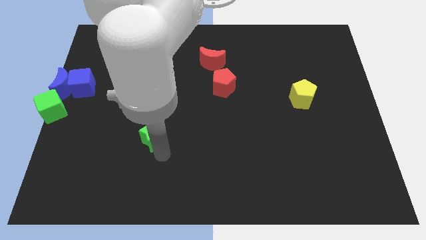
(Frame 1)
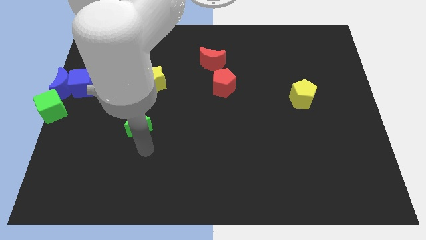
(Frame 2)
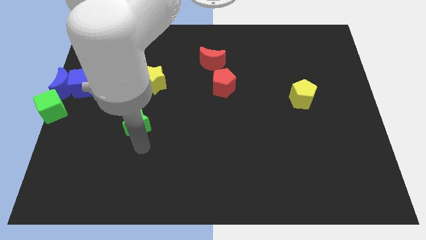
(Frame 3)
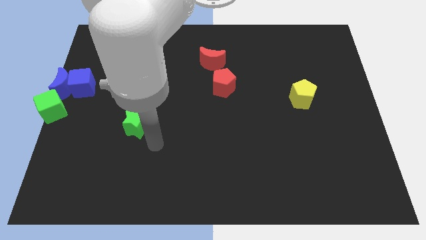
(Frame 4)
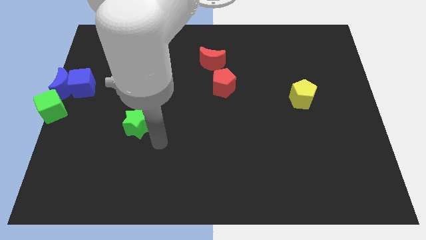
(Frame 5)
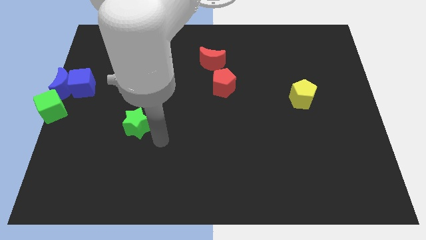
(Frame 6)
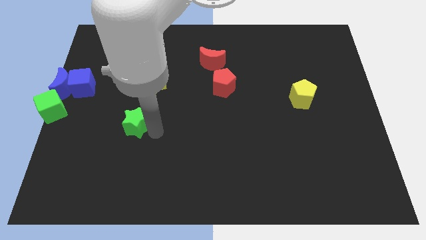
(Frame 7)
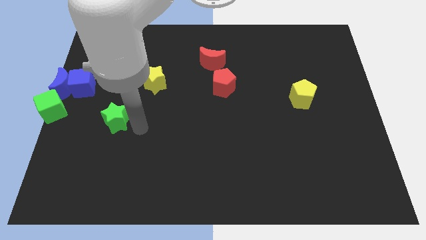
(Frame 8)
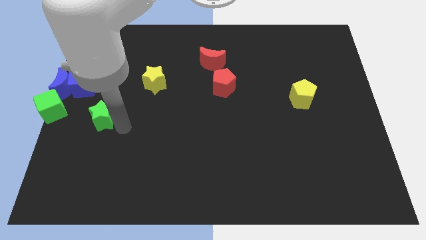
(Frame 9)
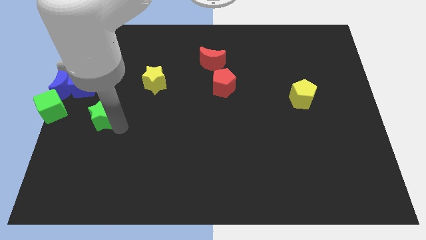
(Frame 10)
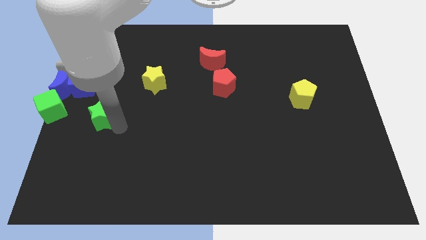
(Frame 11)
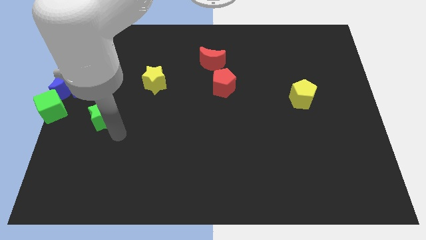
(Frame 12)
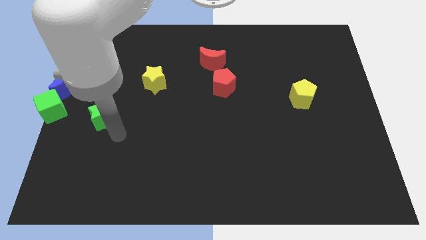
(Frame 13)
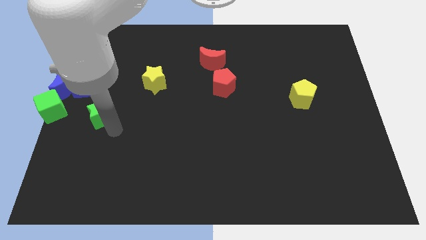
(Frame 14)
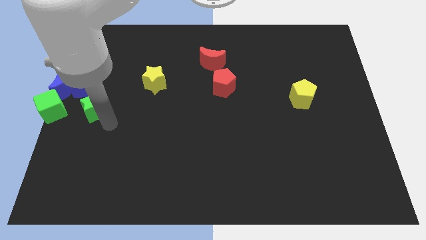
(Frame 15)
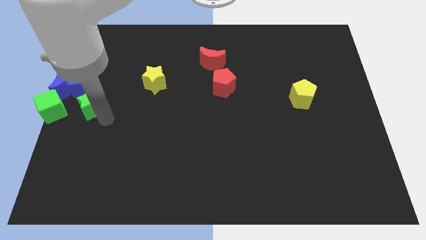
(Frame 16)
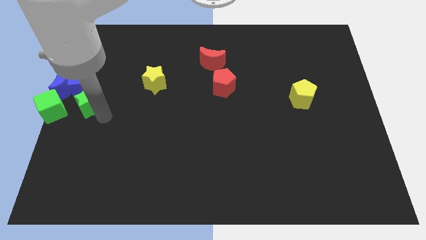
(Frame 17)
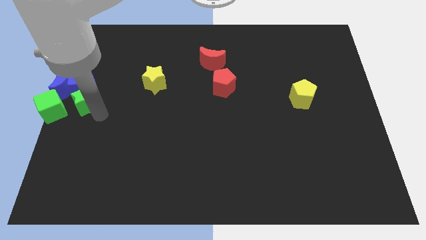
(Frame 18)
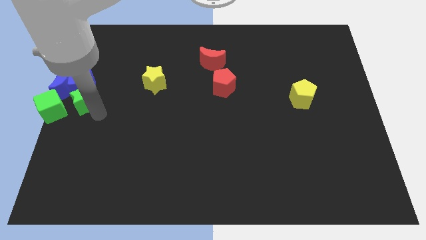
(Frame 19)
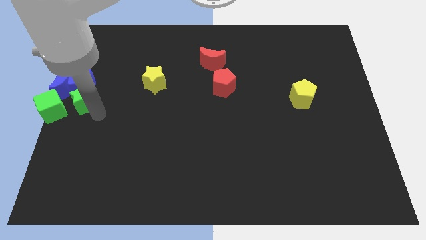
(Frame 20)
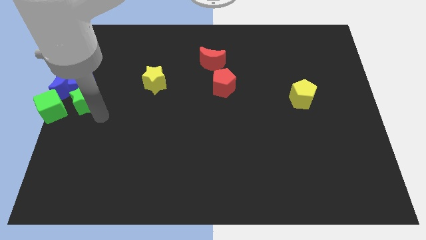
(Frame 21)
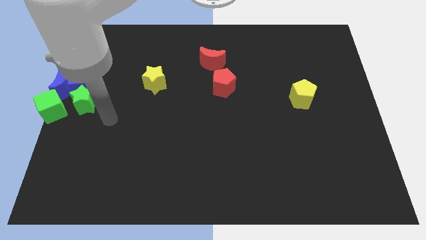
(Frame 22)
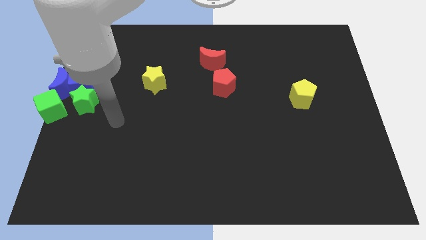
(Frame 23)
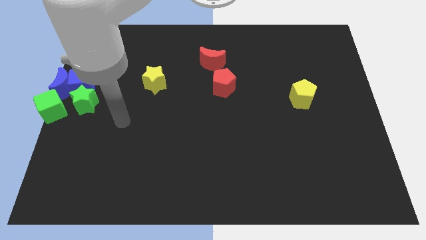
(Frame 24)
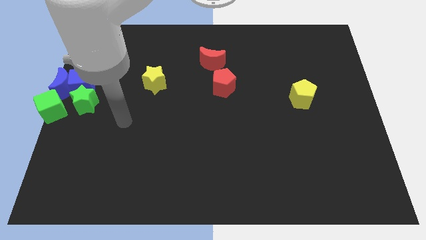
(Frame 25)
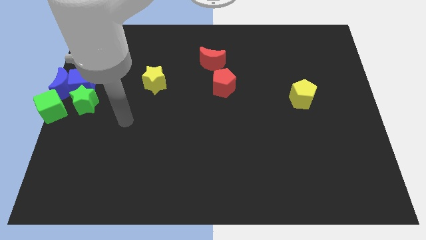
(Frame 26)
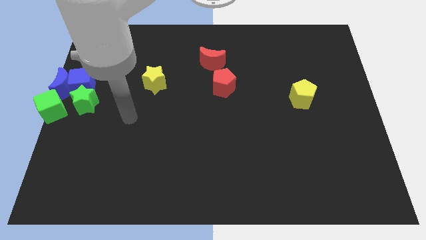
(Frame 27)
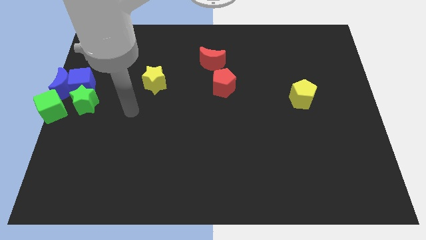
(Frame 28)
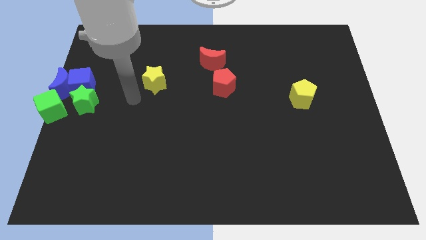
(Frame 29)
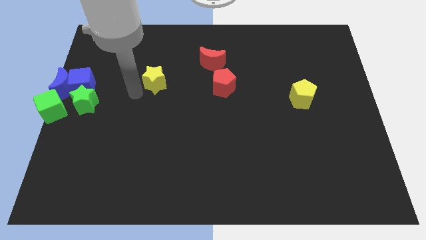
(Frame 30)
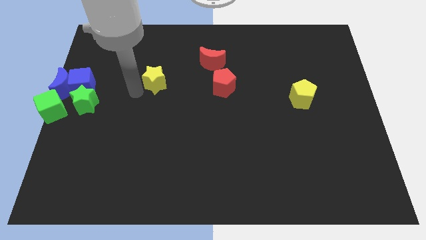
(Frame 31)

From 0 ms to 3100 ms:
push the green star to center left

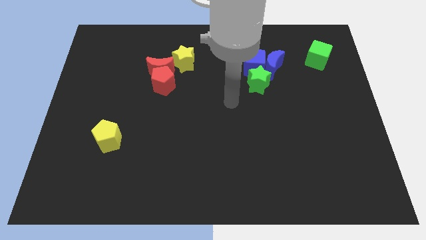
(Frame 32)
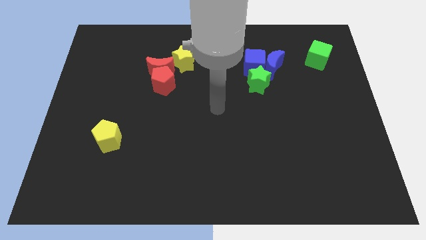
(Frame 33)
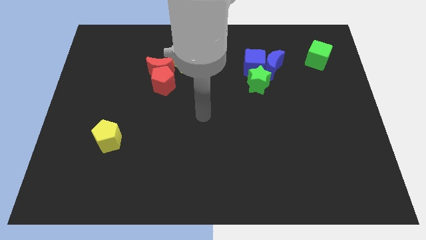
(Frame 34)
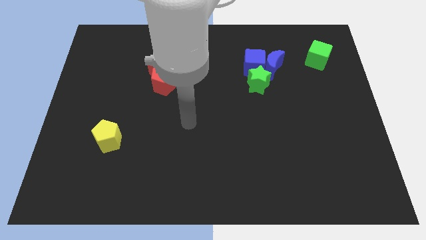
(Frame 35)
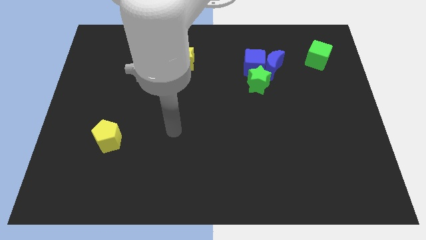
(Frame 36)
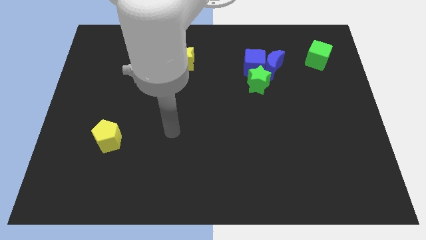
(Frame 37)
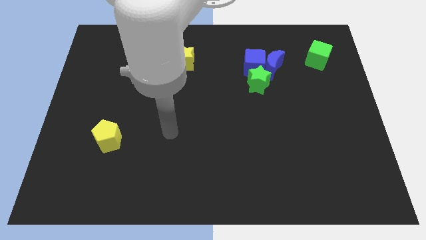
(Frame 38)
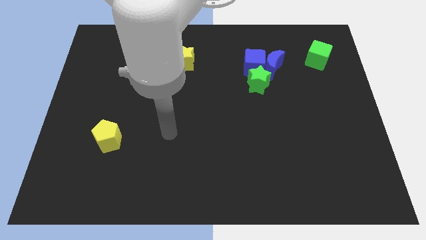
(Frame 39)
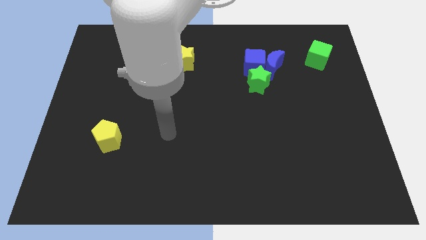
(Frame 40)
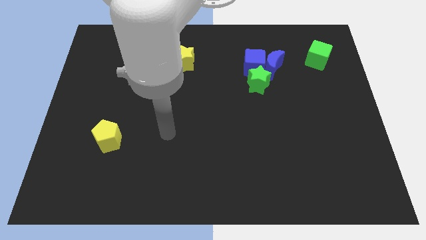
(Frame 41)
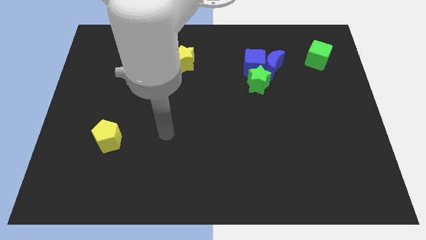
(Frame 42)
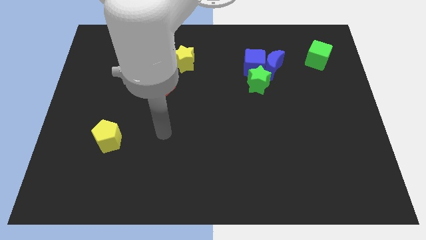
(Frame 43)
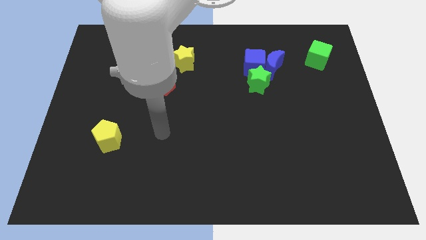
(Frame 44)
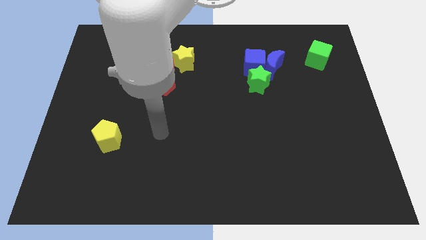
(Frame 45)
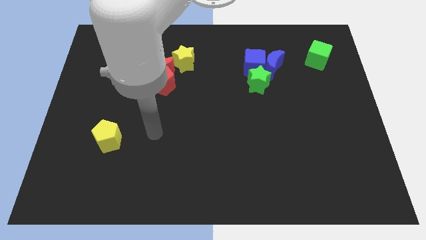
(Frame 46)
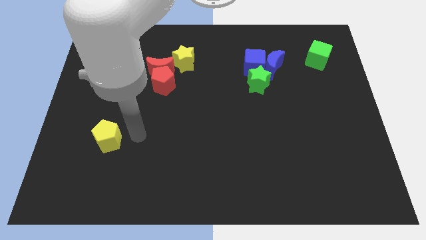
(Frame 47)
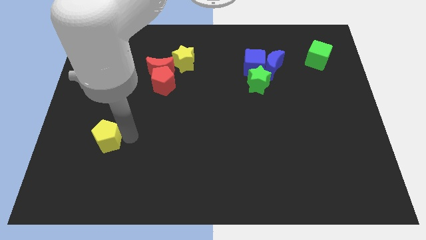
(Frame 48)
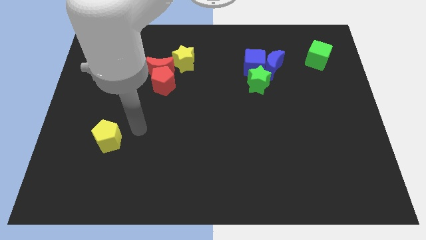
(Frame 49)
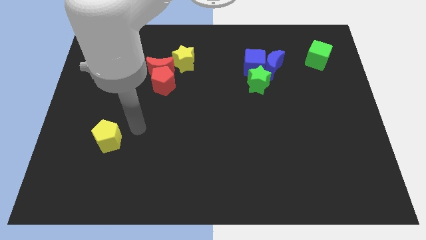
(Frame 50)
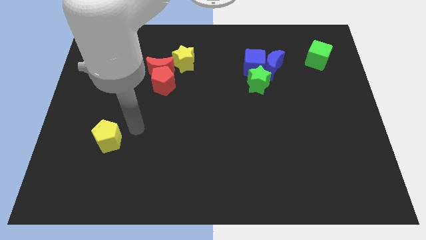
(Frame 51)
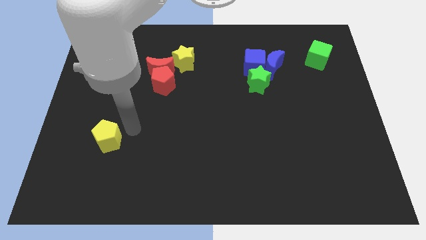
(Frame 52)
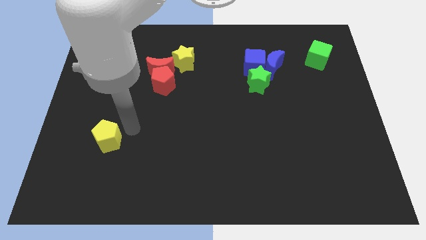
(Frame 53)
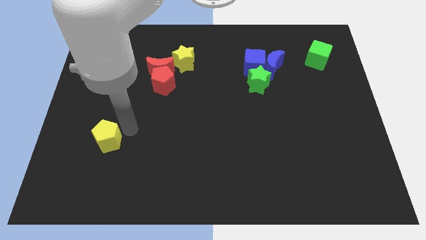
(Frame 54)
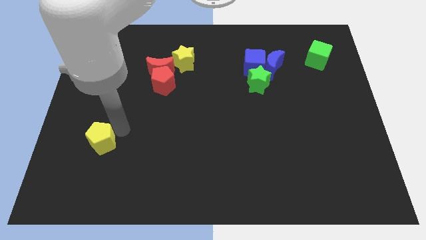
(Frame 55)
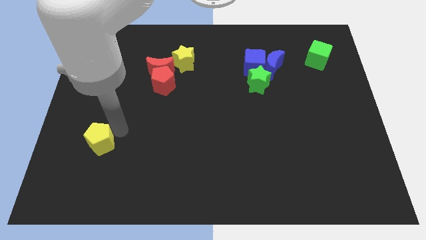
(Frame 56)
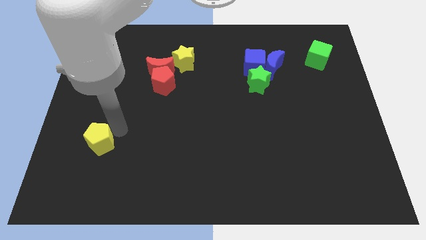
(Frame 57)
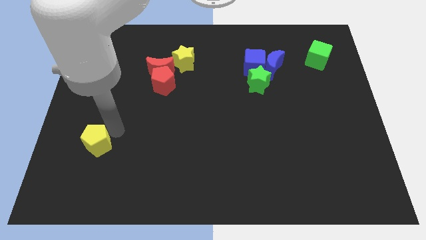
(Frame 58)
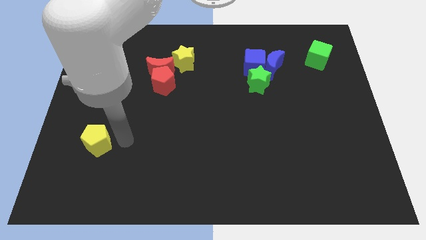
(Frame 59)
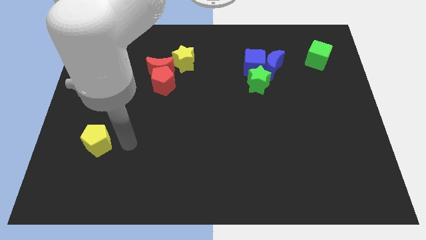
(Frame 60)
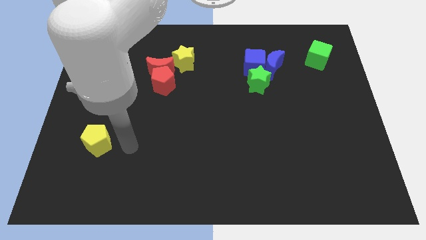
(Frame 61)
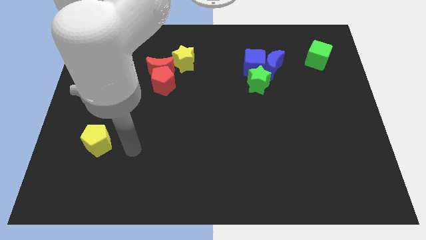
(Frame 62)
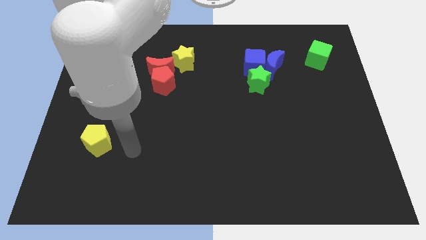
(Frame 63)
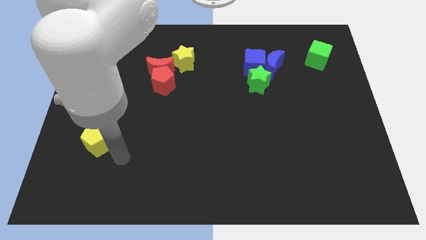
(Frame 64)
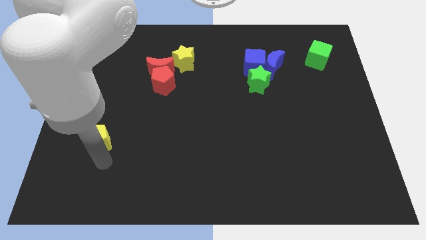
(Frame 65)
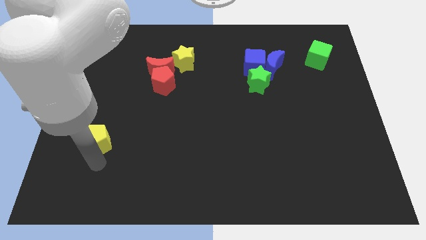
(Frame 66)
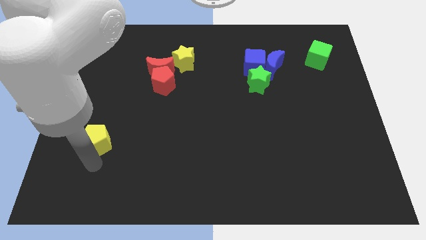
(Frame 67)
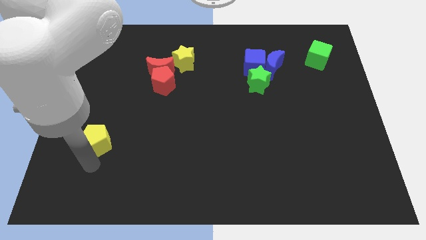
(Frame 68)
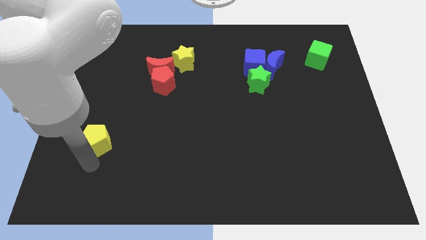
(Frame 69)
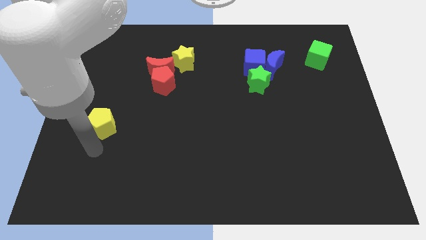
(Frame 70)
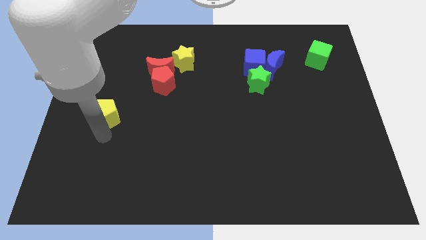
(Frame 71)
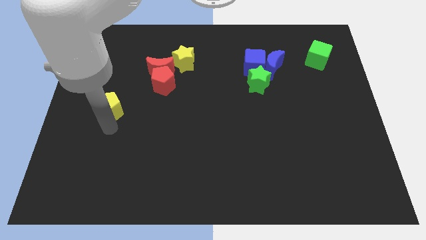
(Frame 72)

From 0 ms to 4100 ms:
push the yellow pentagon to the top of the board

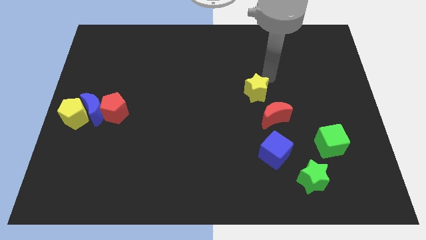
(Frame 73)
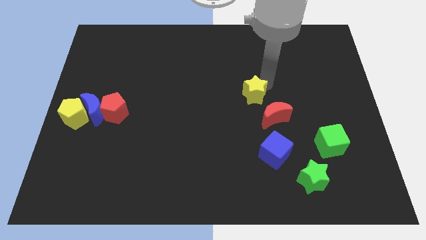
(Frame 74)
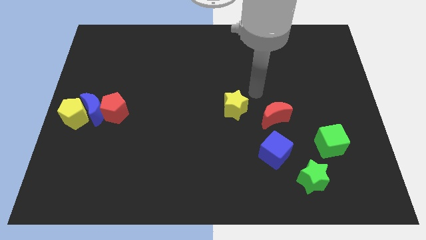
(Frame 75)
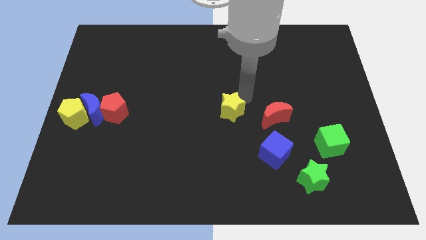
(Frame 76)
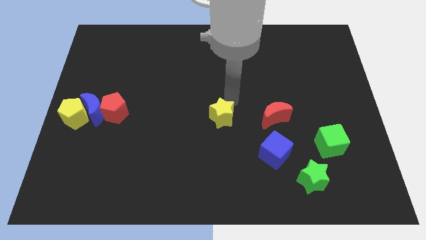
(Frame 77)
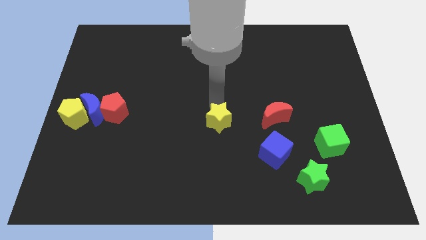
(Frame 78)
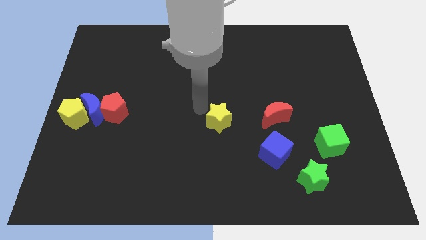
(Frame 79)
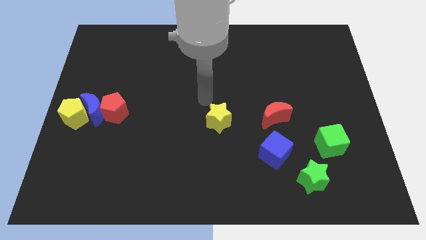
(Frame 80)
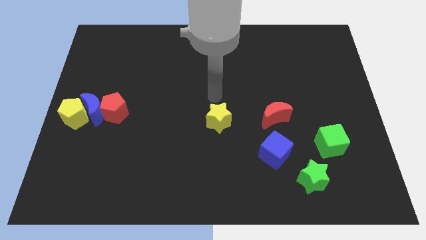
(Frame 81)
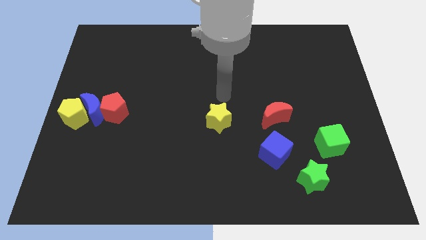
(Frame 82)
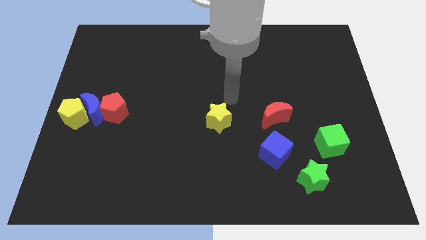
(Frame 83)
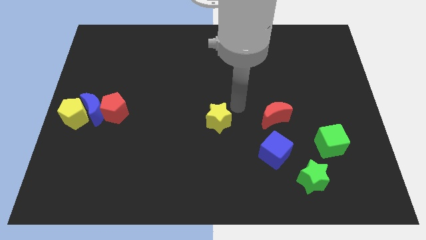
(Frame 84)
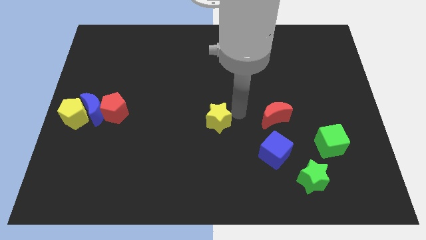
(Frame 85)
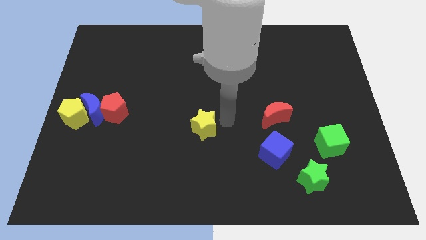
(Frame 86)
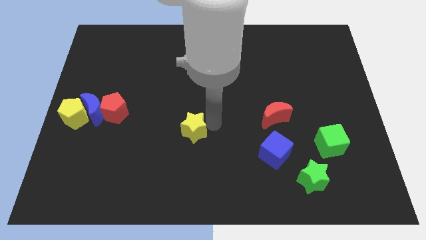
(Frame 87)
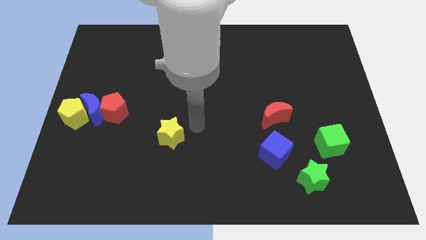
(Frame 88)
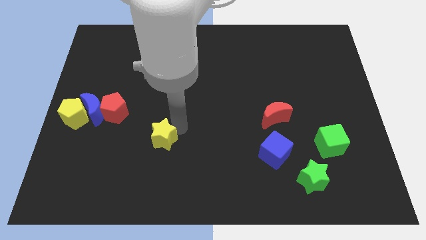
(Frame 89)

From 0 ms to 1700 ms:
push the yellow star towards the bottom left corner of the board

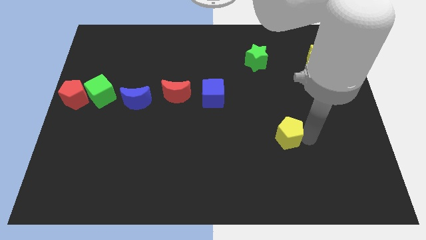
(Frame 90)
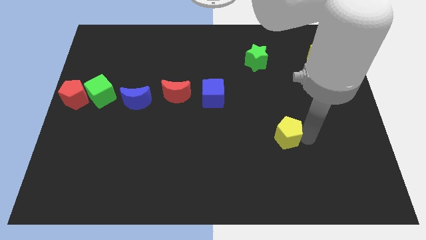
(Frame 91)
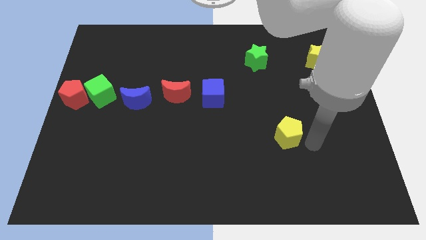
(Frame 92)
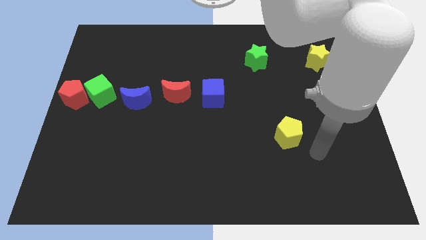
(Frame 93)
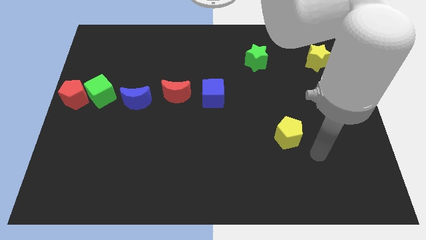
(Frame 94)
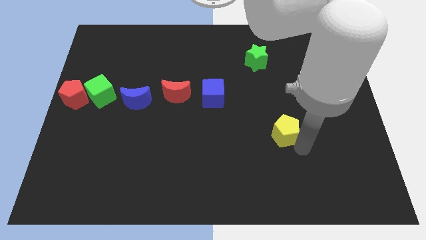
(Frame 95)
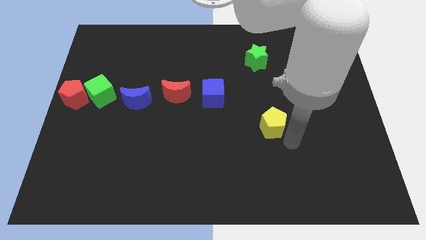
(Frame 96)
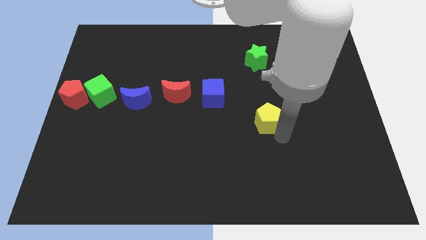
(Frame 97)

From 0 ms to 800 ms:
push yellow pentagon below green star
